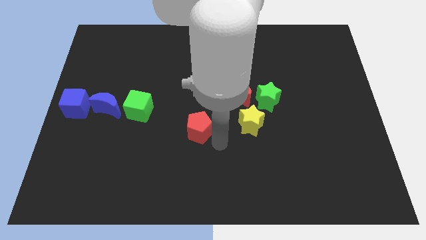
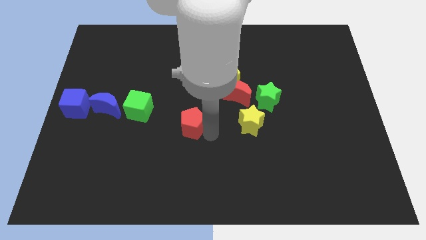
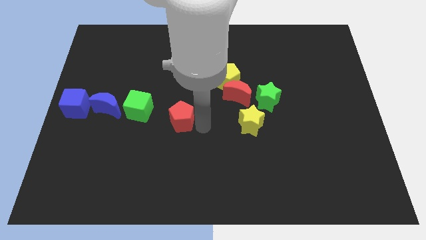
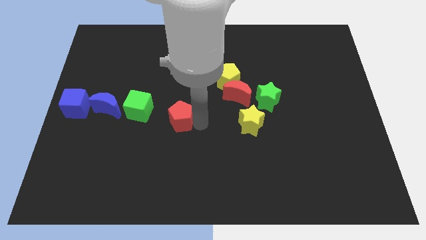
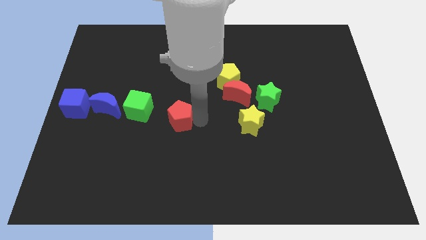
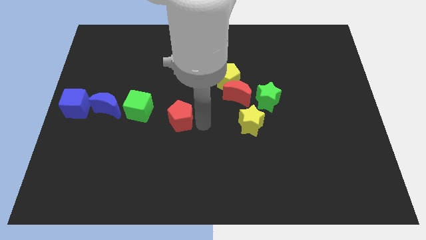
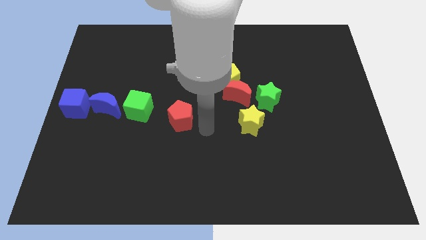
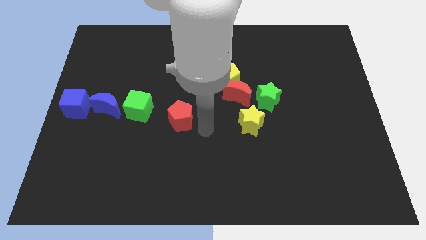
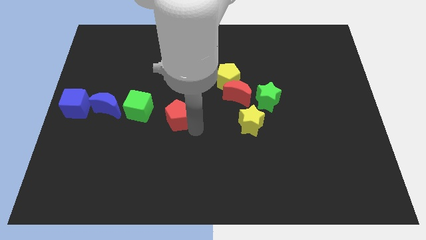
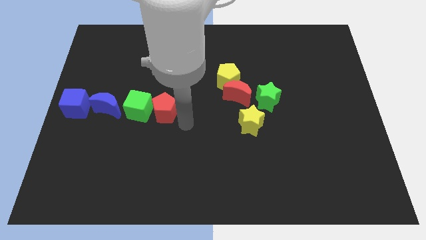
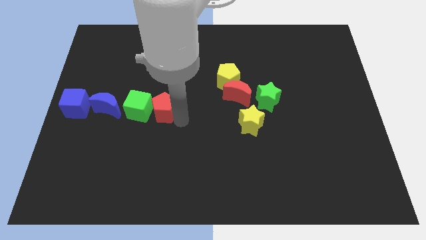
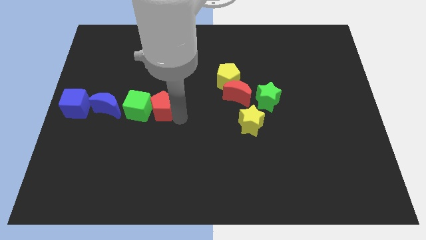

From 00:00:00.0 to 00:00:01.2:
push the red pentagon close to the green cube

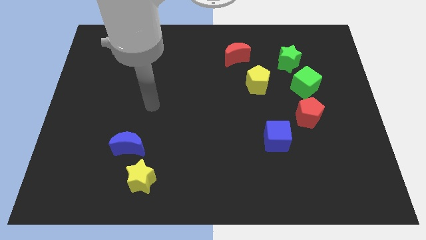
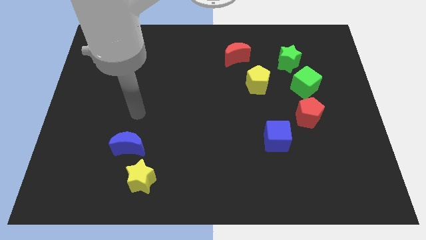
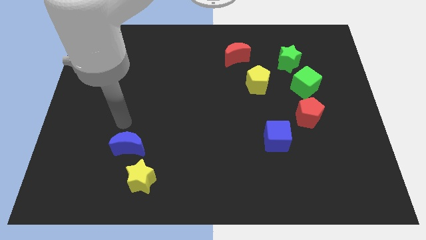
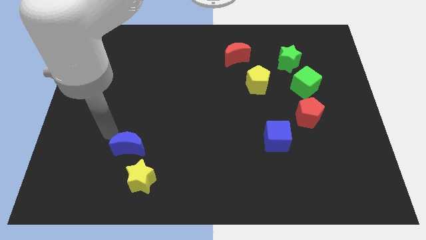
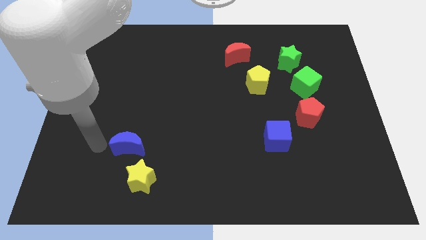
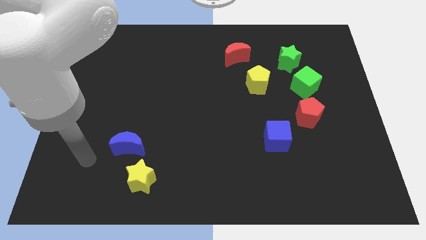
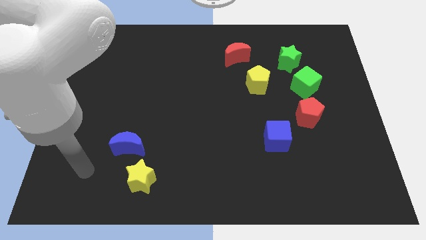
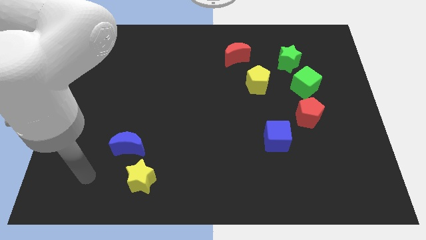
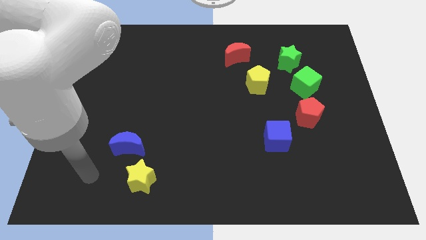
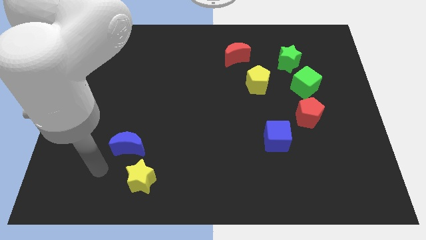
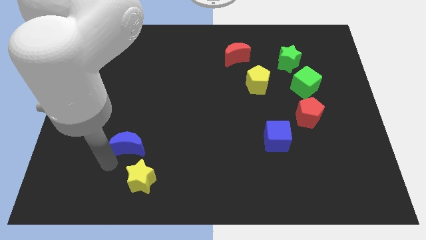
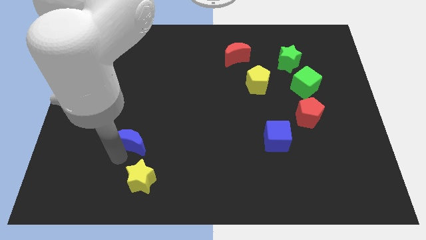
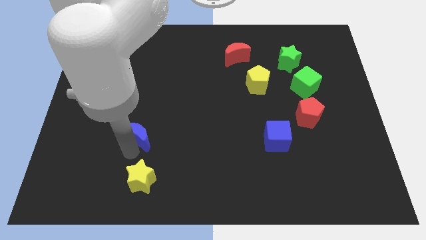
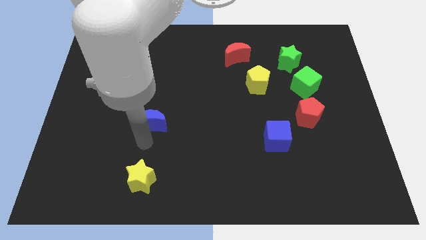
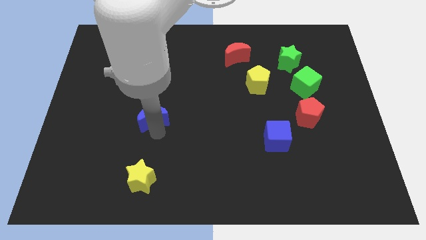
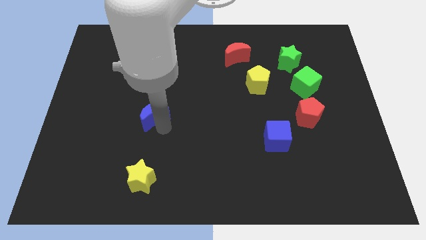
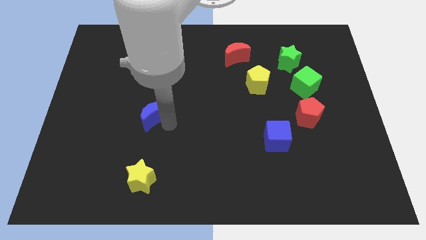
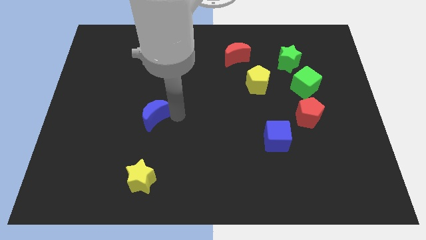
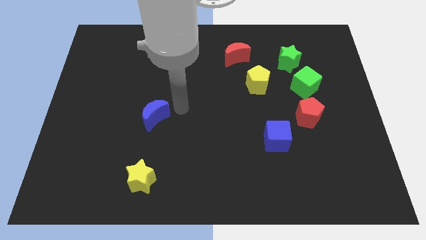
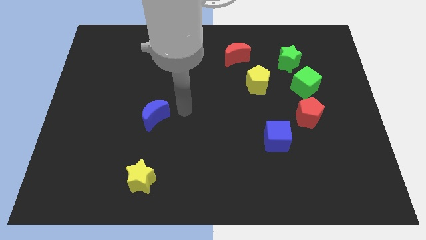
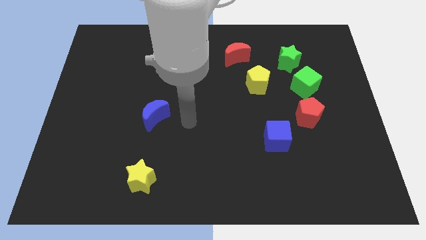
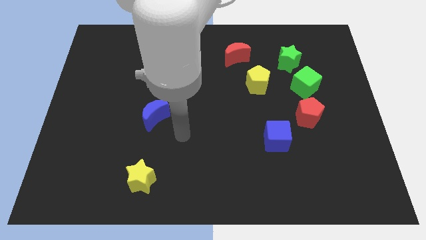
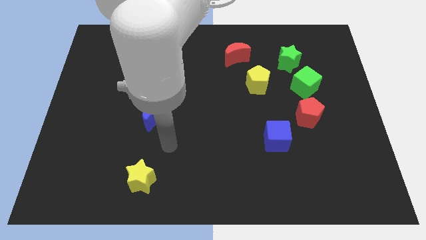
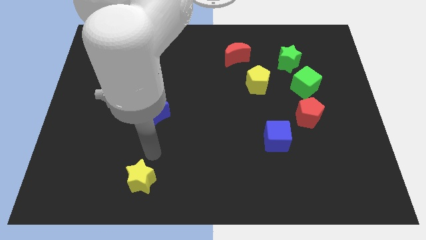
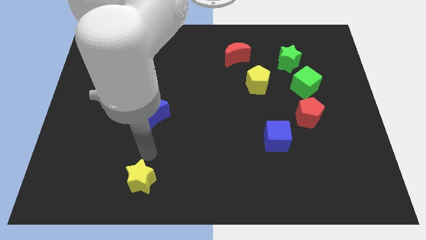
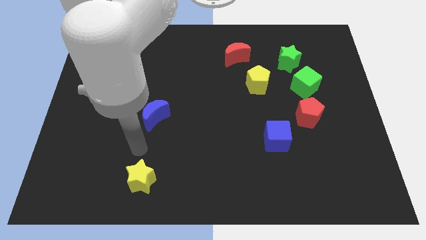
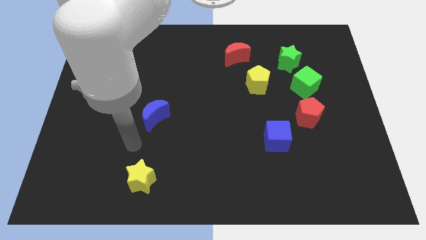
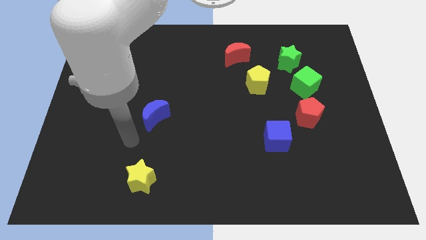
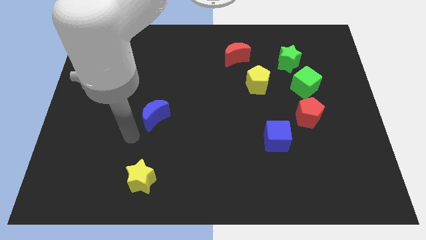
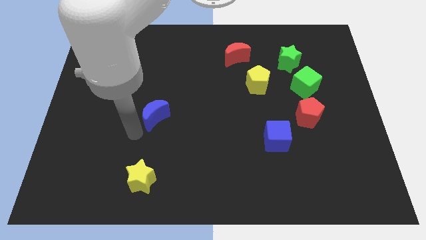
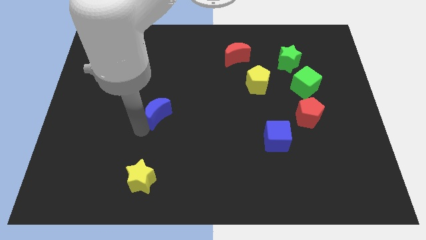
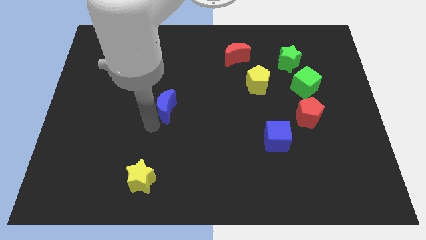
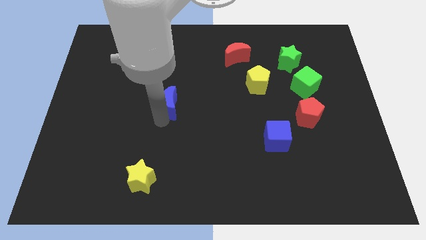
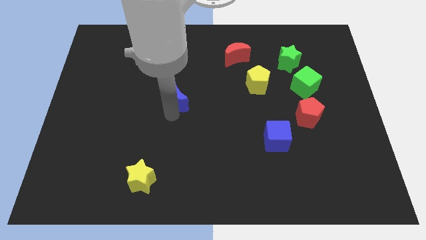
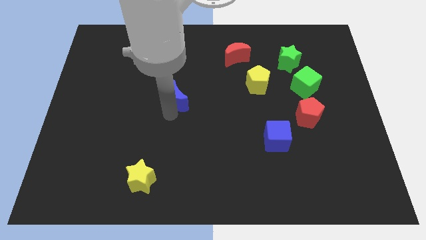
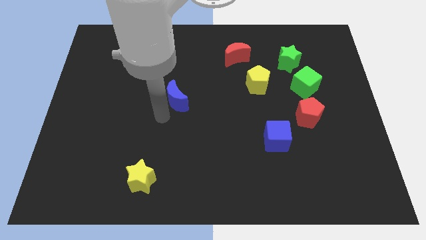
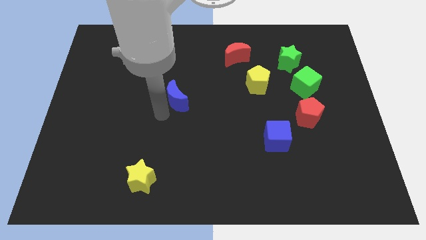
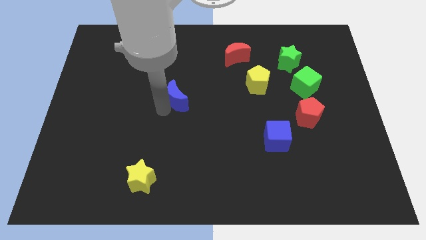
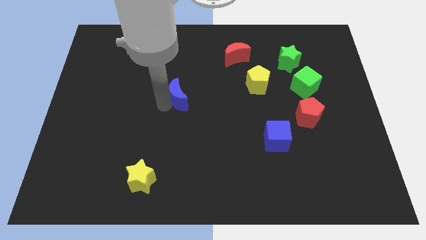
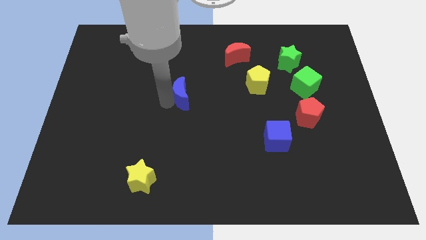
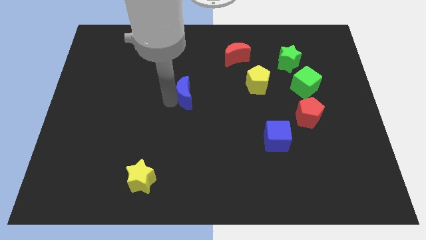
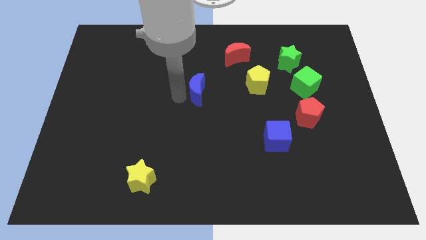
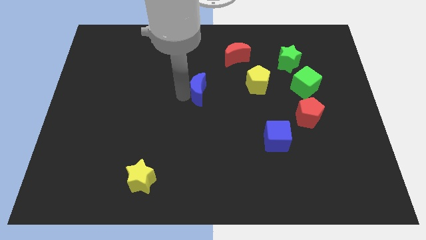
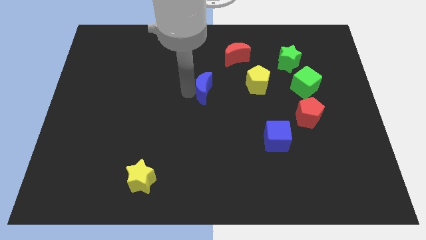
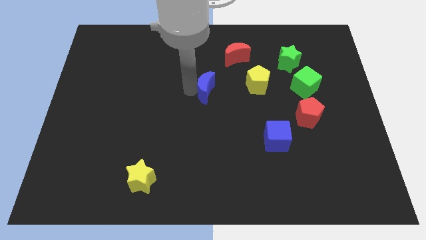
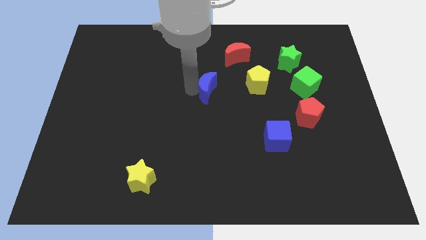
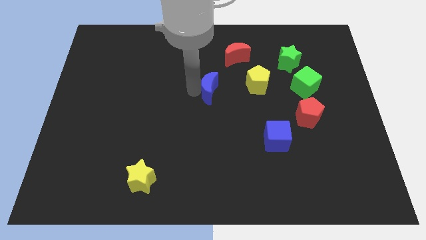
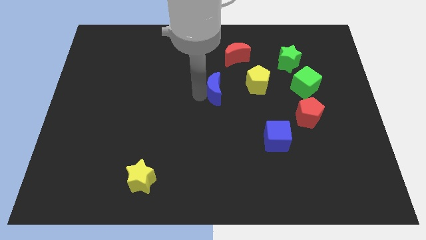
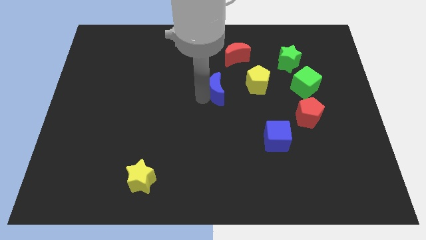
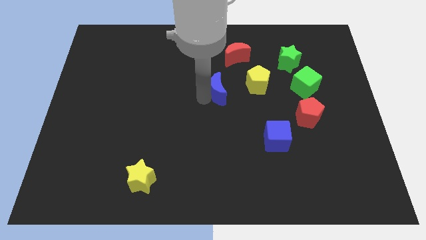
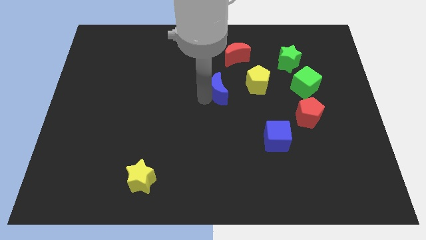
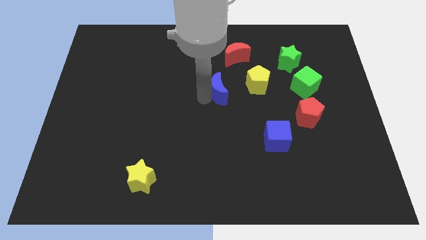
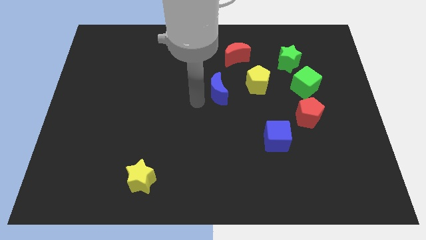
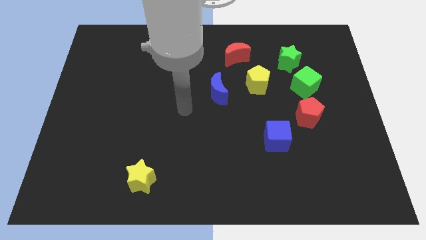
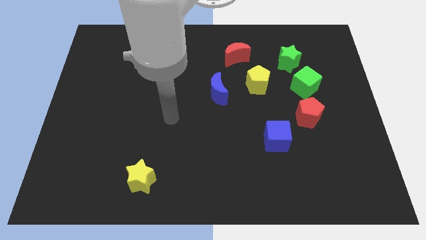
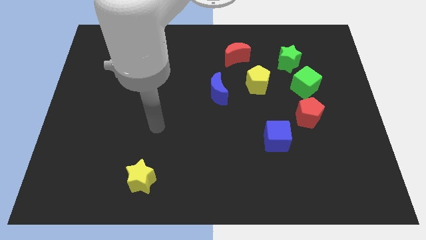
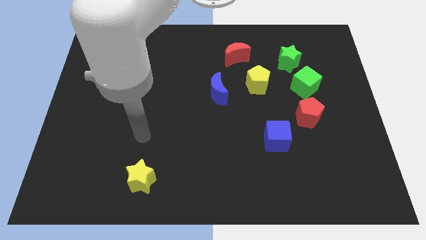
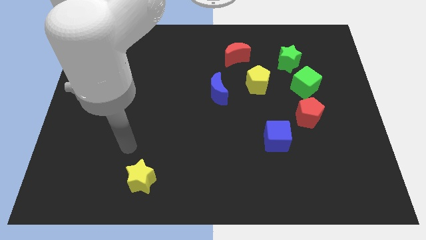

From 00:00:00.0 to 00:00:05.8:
push the blue crescent to the left of the yellow pentagon

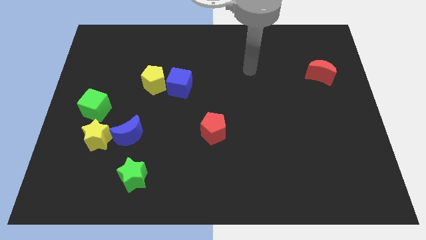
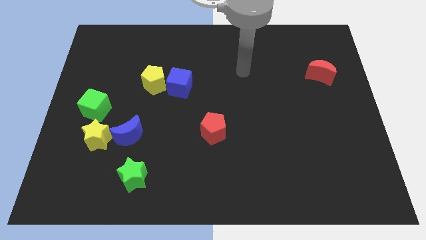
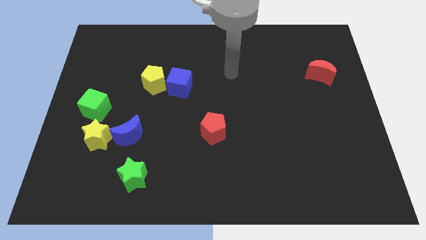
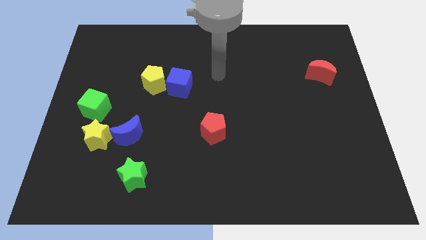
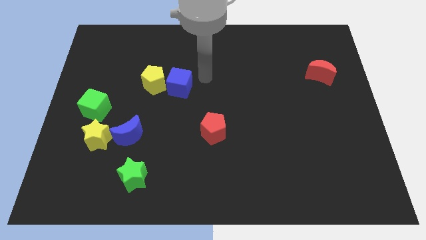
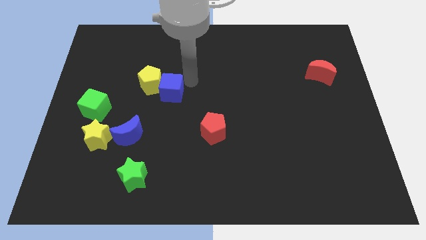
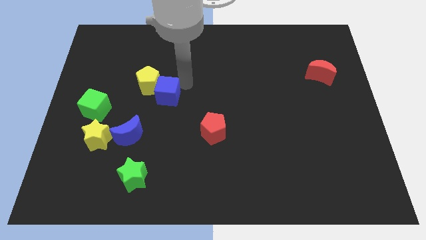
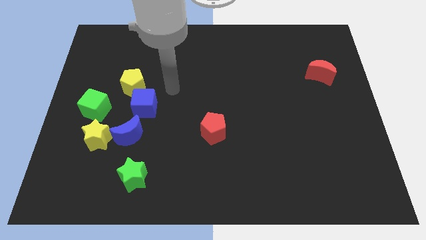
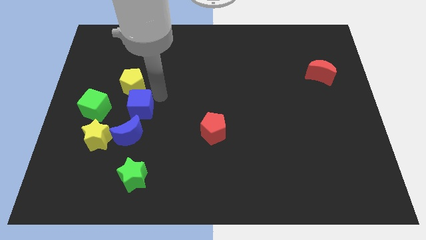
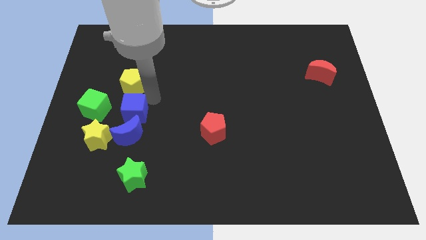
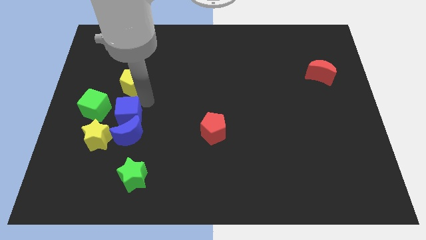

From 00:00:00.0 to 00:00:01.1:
place the blue cube right to the green cube

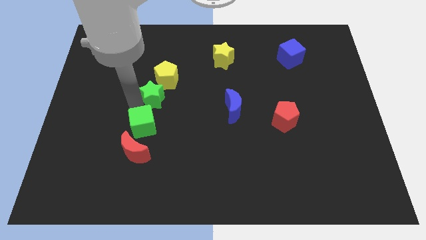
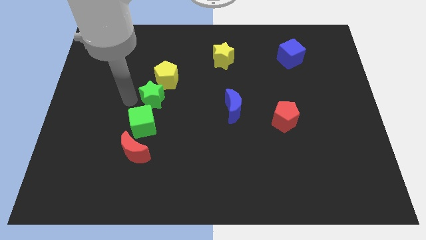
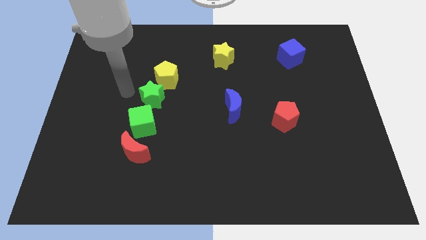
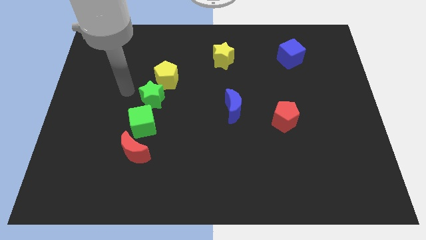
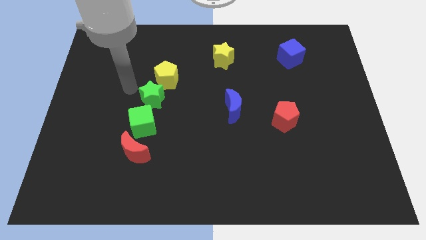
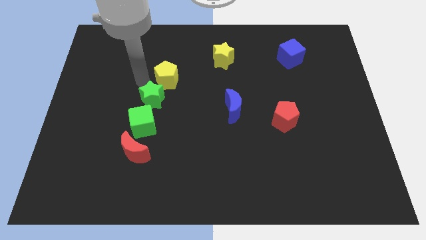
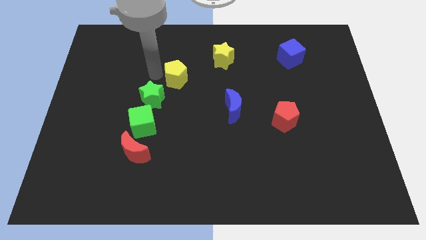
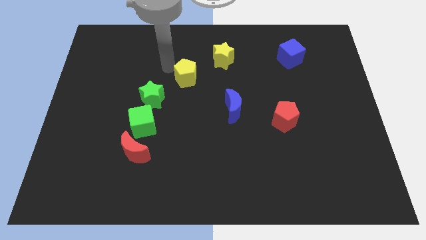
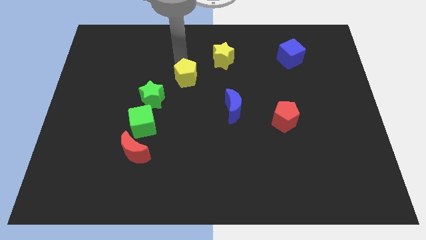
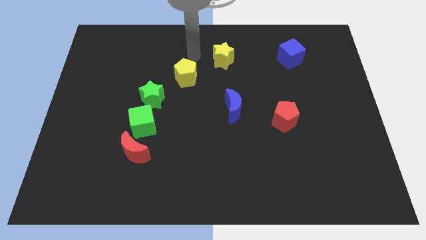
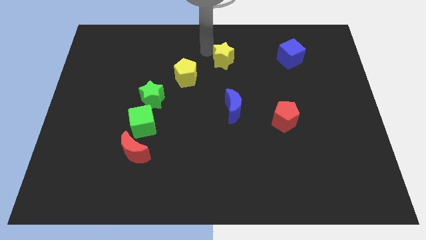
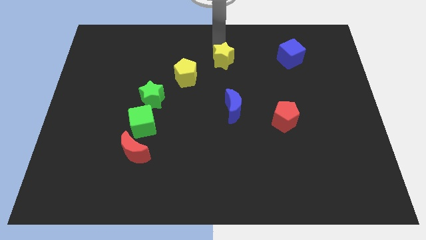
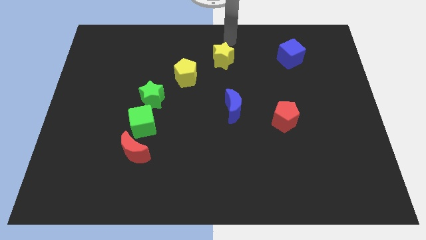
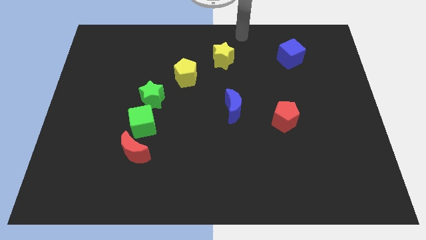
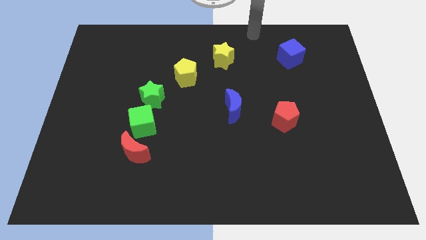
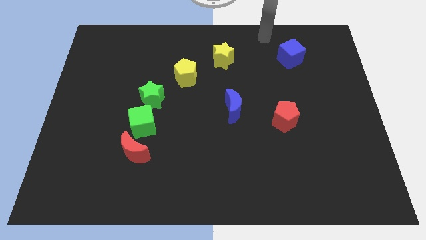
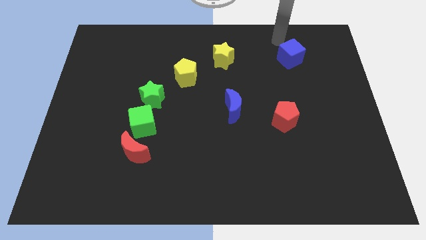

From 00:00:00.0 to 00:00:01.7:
move the yellow pentagon slightly towards the right
